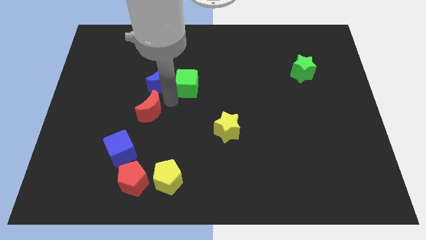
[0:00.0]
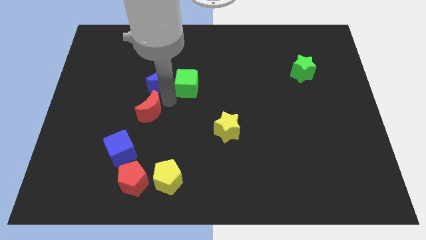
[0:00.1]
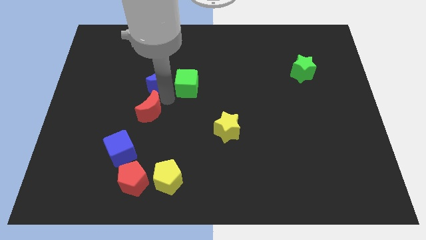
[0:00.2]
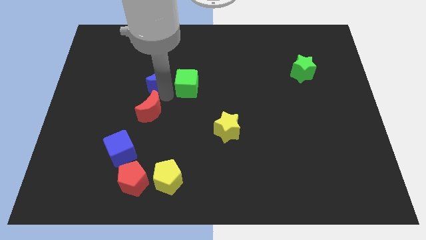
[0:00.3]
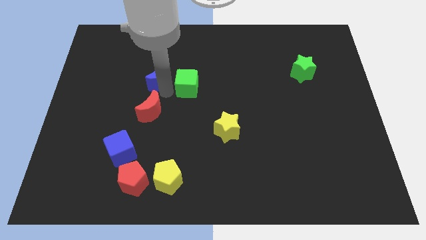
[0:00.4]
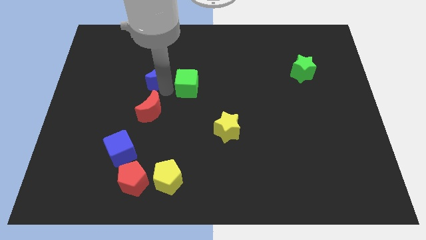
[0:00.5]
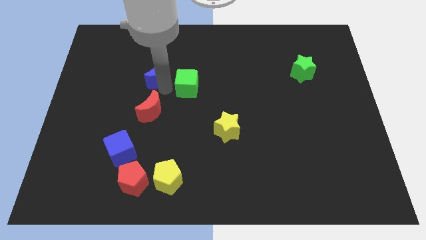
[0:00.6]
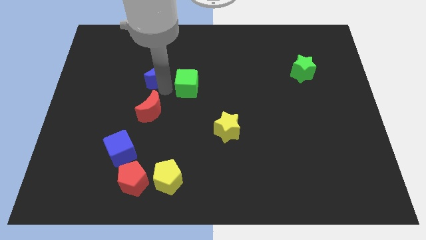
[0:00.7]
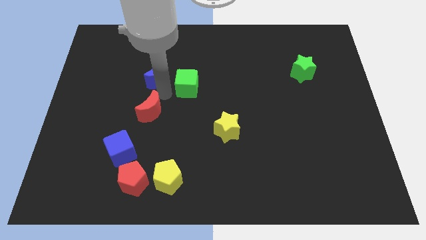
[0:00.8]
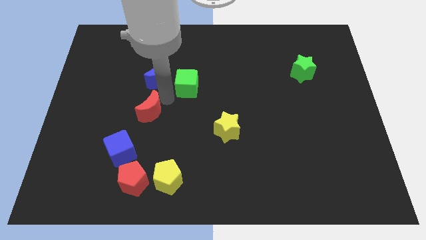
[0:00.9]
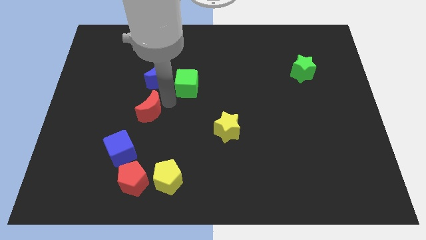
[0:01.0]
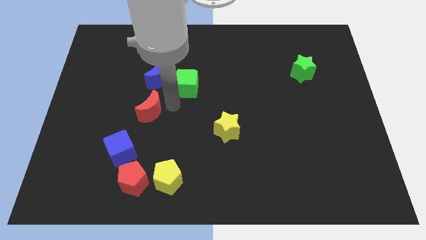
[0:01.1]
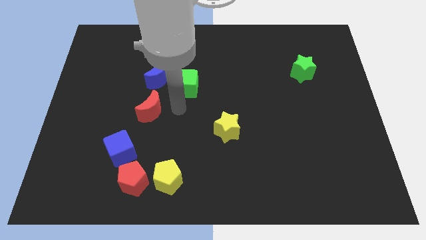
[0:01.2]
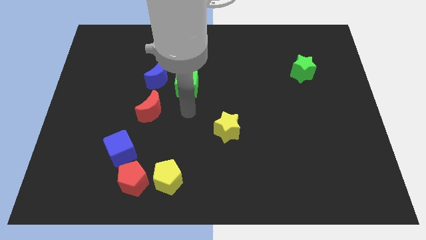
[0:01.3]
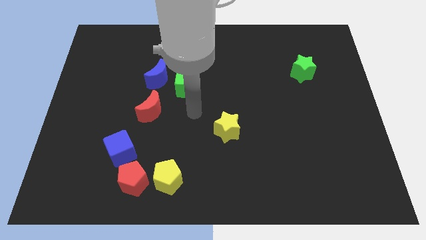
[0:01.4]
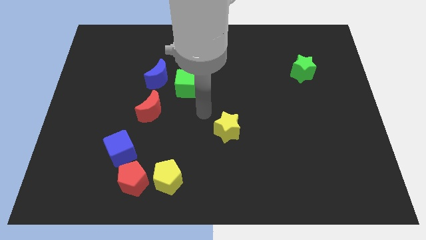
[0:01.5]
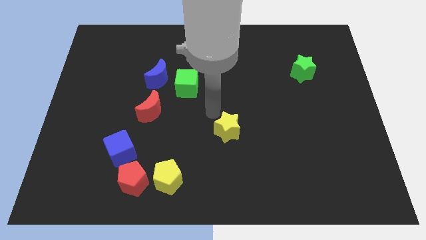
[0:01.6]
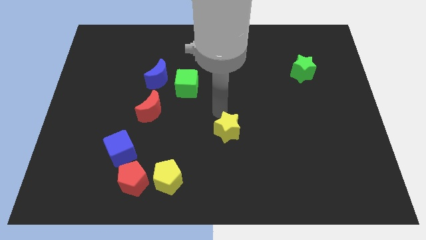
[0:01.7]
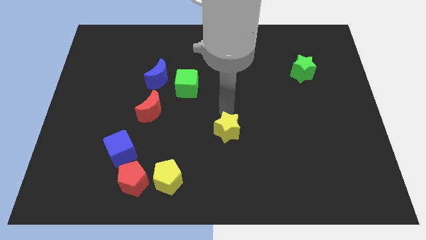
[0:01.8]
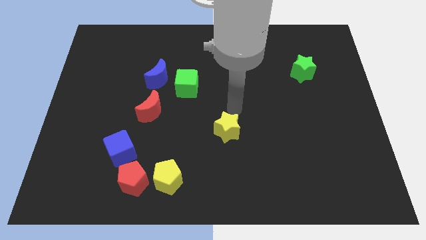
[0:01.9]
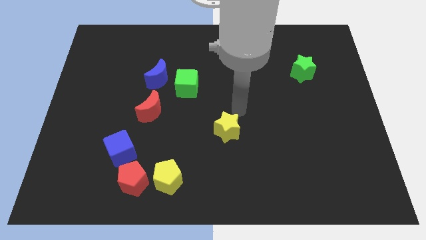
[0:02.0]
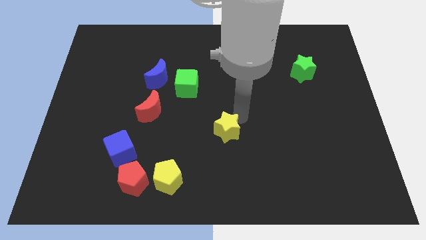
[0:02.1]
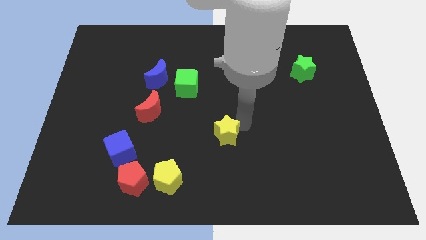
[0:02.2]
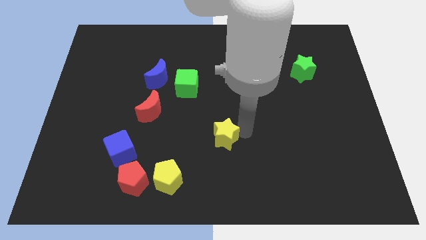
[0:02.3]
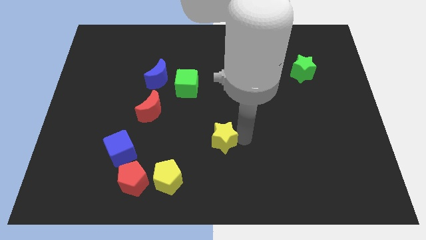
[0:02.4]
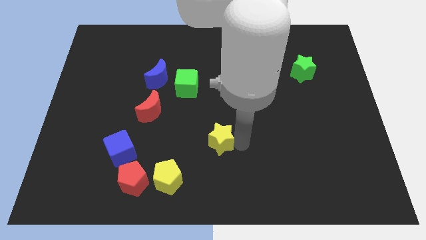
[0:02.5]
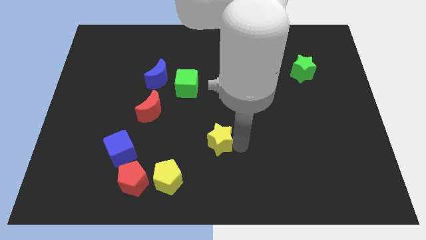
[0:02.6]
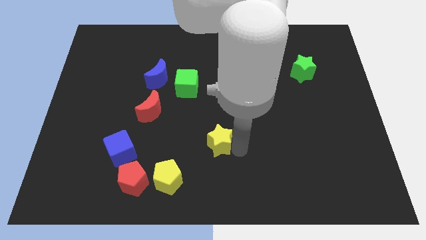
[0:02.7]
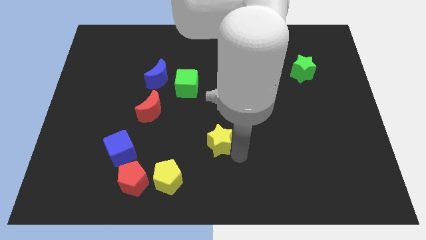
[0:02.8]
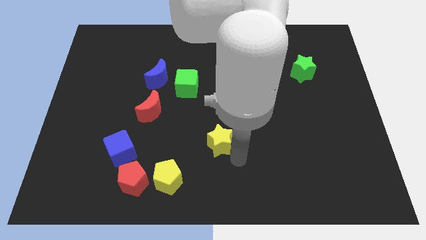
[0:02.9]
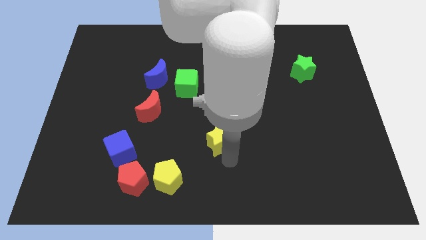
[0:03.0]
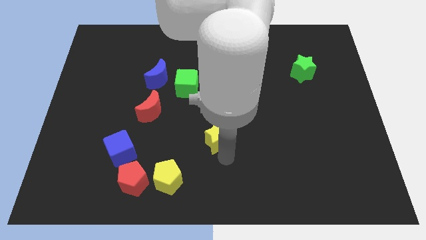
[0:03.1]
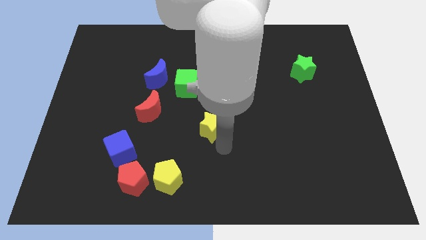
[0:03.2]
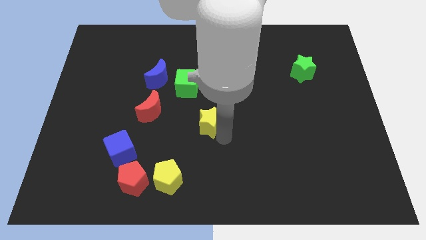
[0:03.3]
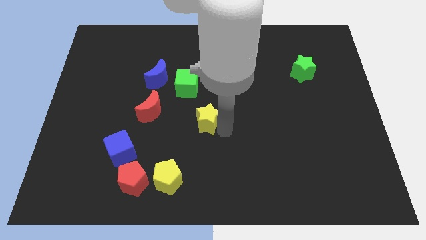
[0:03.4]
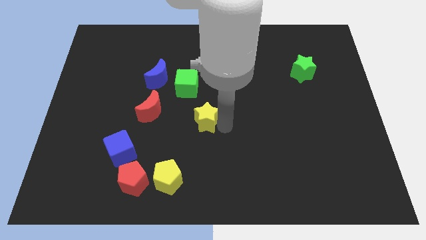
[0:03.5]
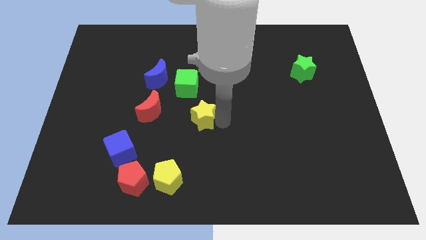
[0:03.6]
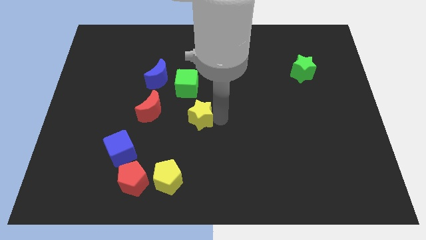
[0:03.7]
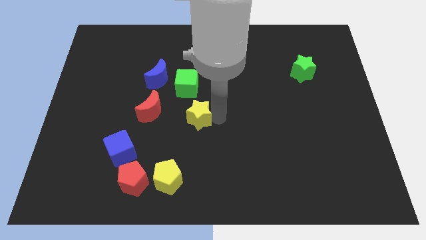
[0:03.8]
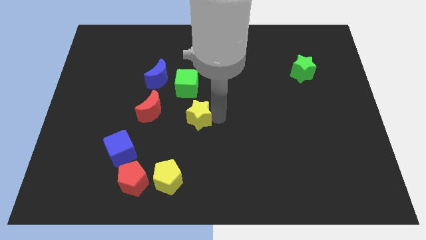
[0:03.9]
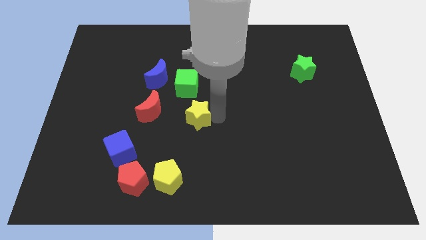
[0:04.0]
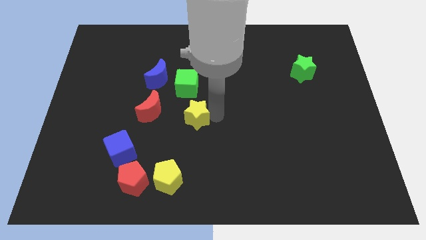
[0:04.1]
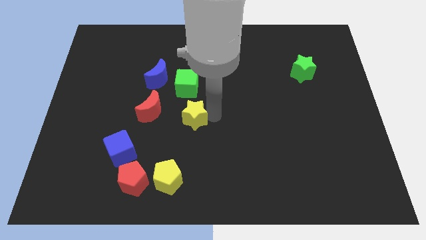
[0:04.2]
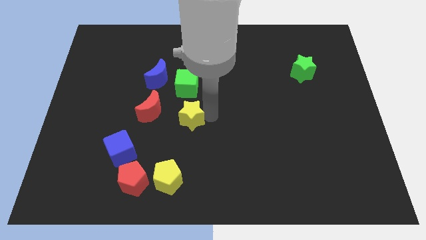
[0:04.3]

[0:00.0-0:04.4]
place the yellow star to the right of the red crescent

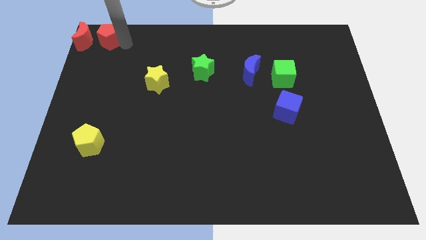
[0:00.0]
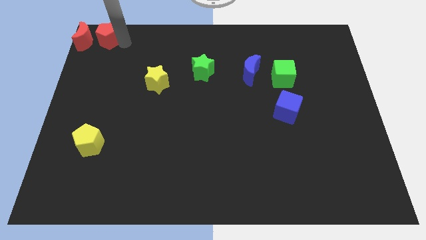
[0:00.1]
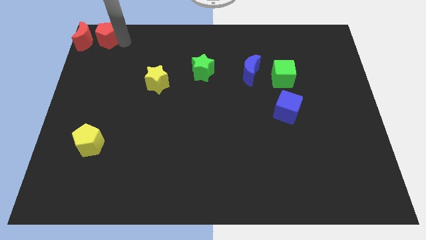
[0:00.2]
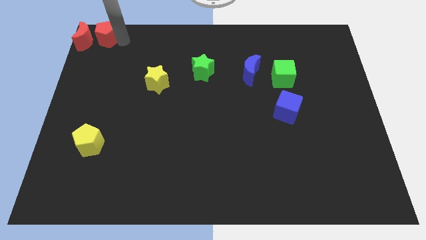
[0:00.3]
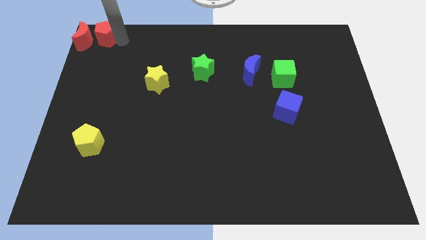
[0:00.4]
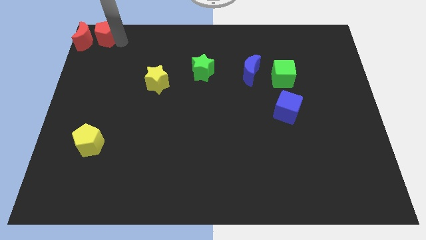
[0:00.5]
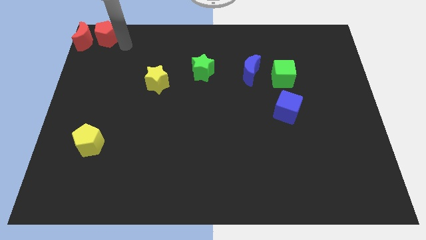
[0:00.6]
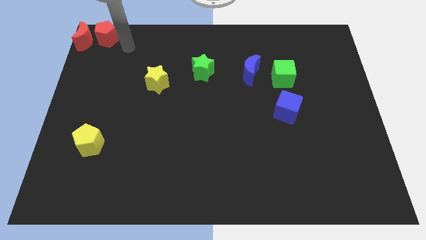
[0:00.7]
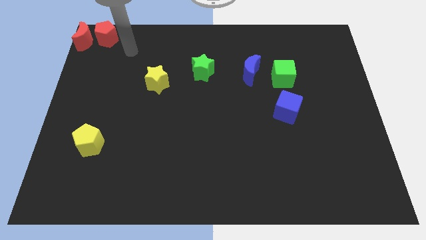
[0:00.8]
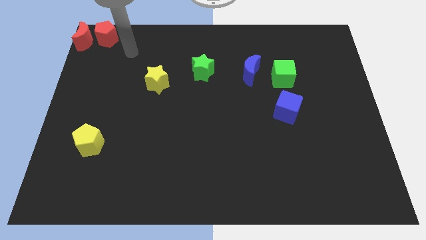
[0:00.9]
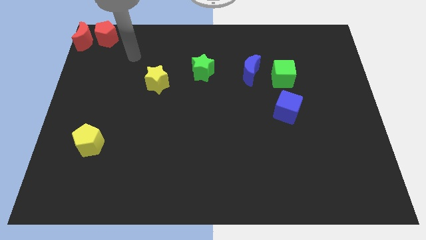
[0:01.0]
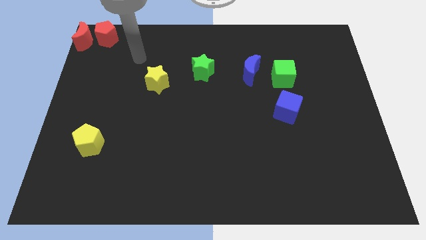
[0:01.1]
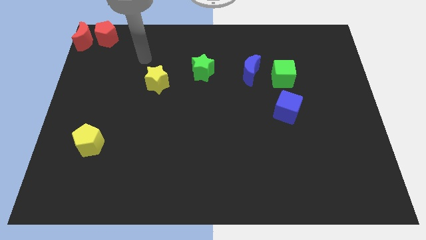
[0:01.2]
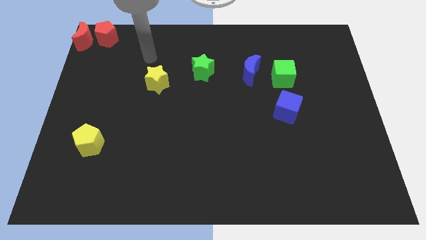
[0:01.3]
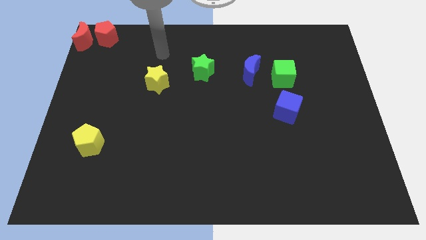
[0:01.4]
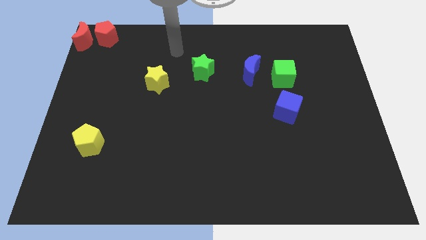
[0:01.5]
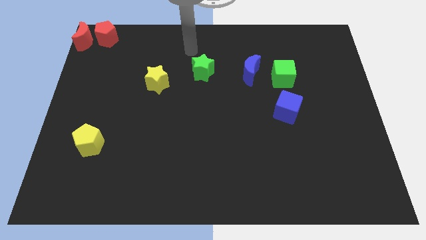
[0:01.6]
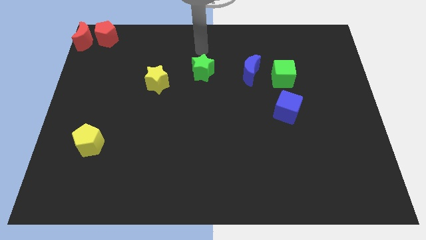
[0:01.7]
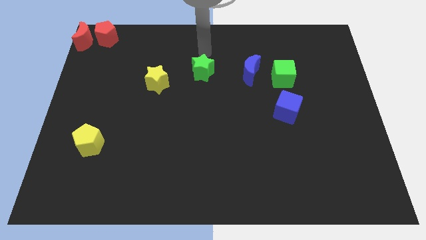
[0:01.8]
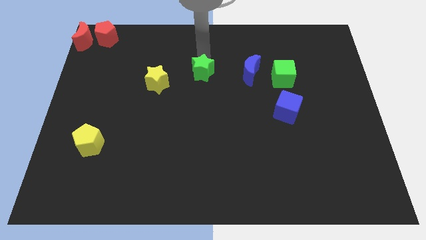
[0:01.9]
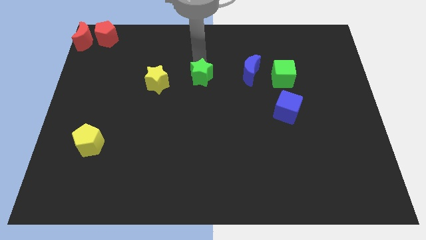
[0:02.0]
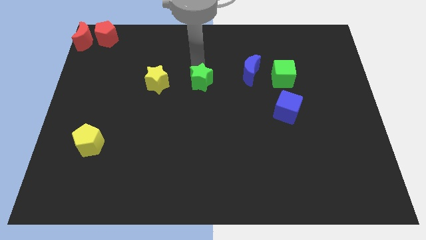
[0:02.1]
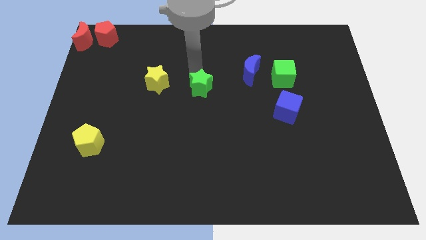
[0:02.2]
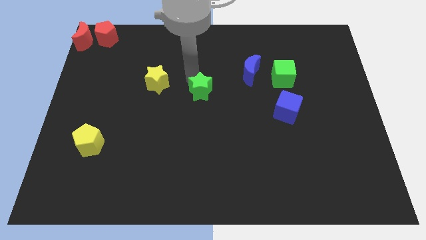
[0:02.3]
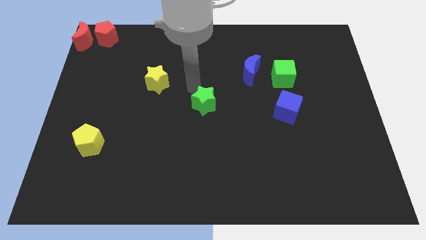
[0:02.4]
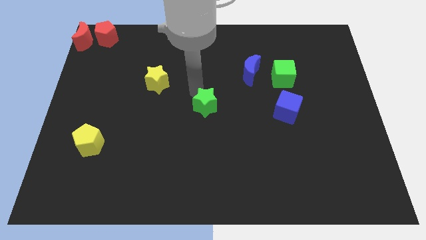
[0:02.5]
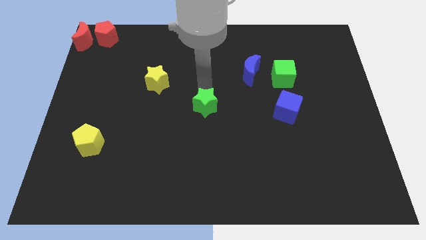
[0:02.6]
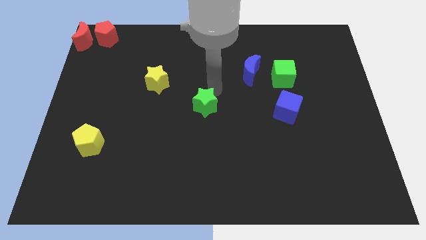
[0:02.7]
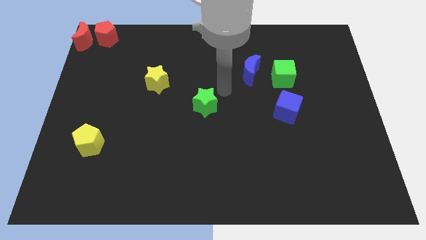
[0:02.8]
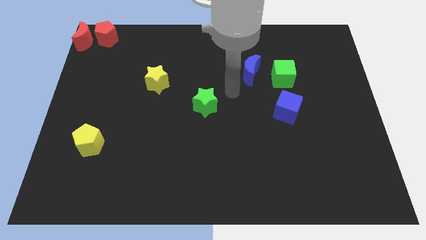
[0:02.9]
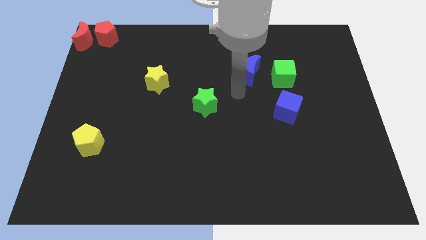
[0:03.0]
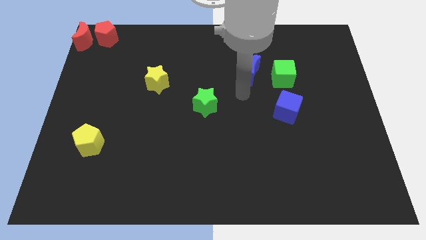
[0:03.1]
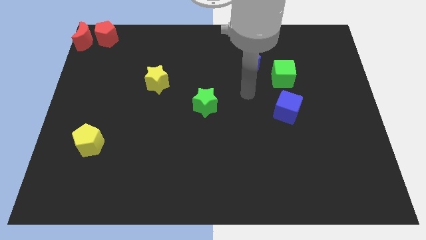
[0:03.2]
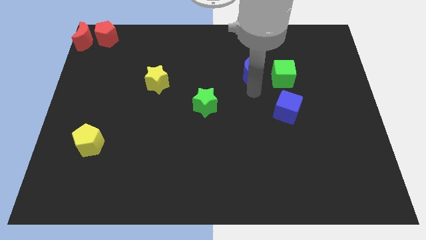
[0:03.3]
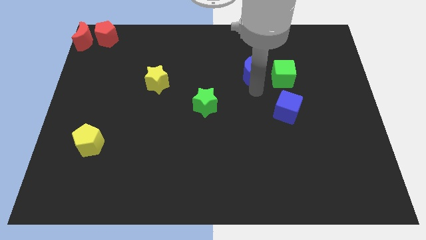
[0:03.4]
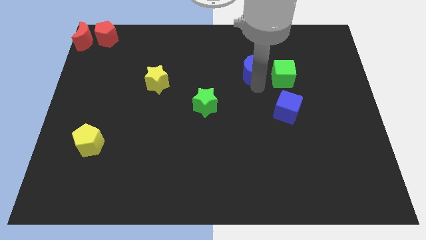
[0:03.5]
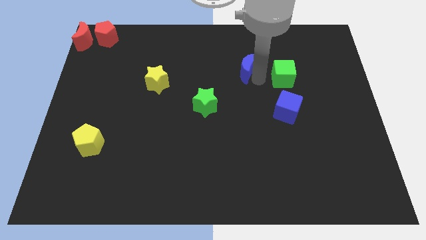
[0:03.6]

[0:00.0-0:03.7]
push the green star to the center of the board

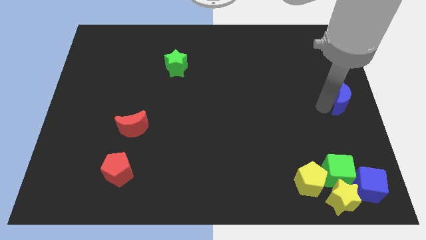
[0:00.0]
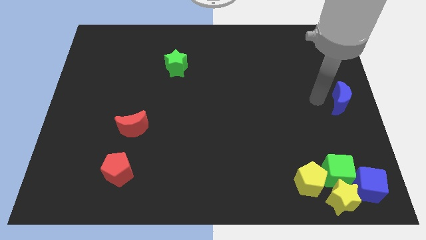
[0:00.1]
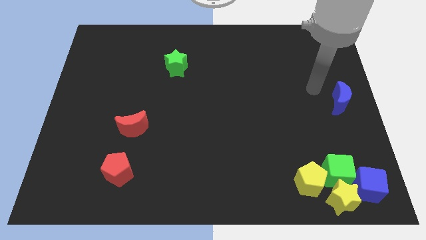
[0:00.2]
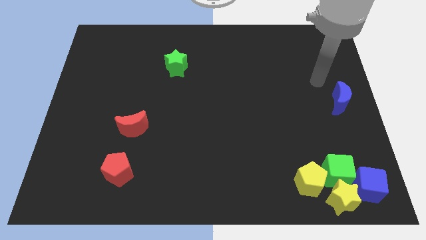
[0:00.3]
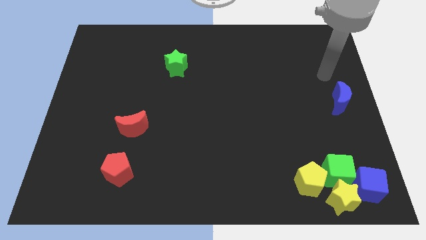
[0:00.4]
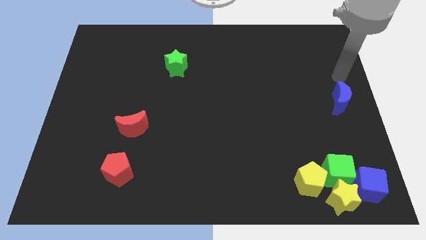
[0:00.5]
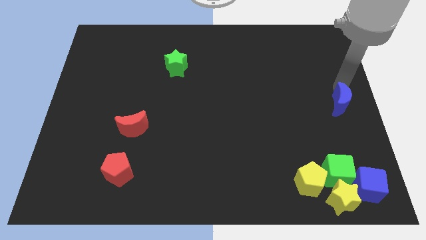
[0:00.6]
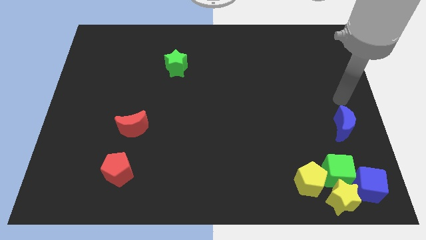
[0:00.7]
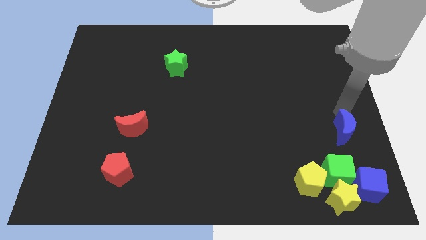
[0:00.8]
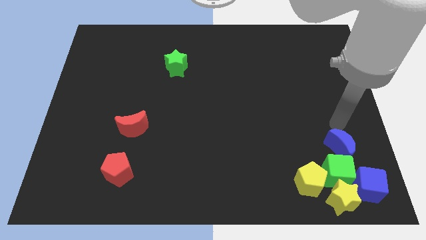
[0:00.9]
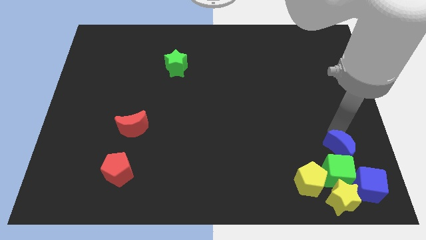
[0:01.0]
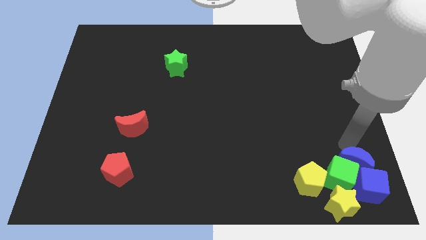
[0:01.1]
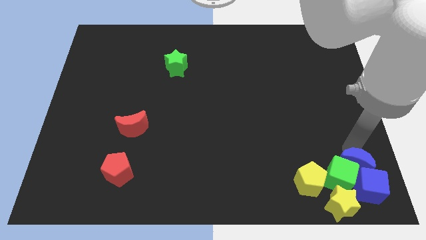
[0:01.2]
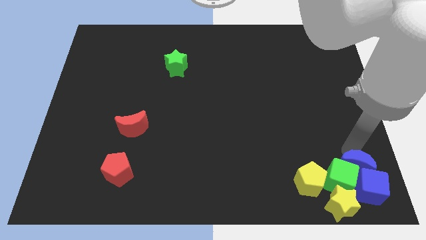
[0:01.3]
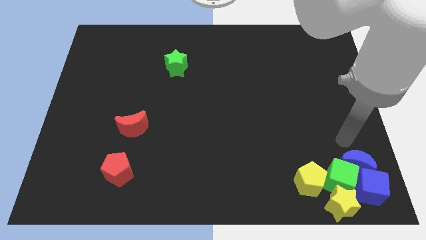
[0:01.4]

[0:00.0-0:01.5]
push blue moon into the green cube
